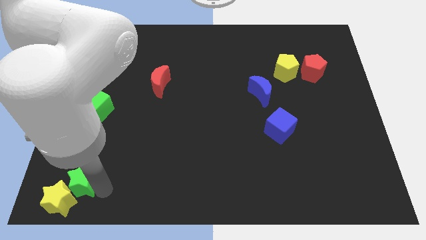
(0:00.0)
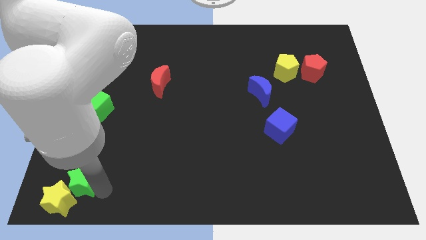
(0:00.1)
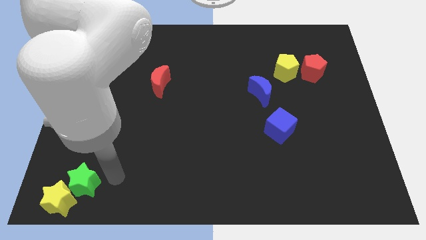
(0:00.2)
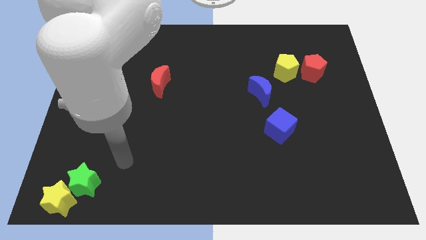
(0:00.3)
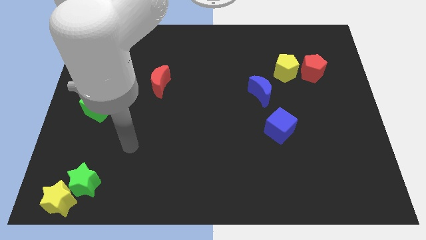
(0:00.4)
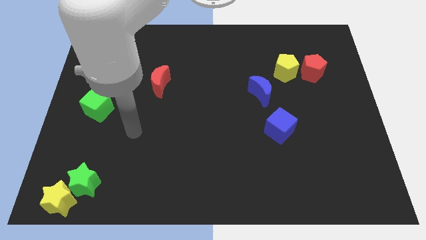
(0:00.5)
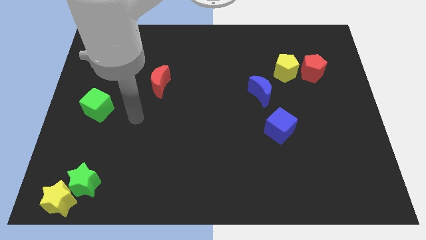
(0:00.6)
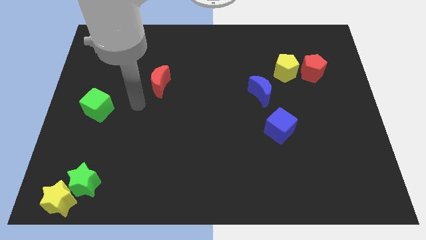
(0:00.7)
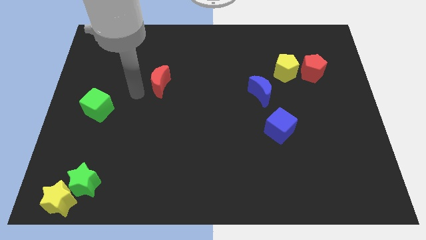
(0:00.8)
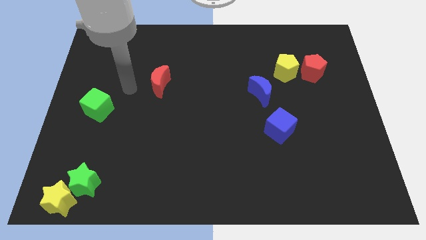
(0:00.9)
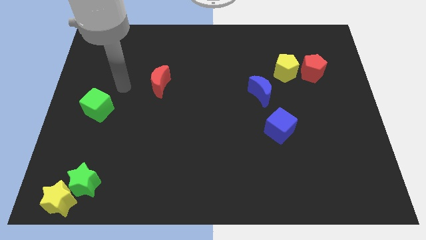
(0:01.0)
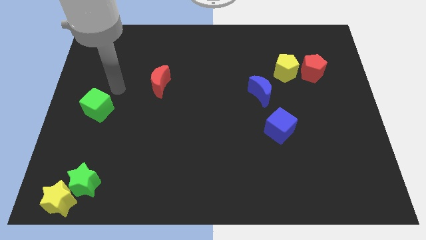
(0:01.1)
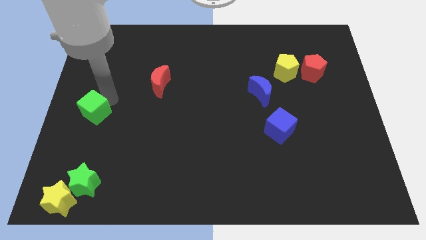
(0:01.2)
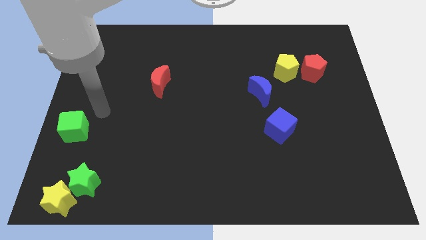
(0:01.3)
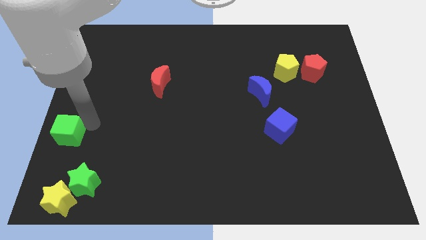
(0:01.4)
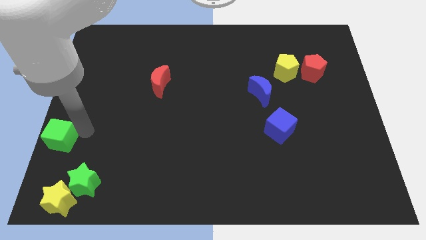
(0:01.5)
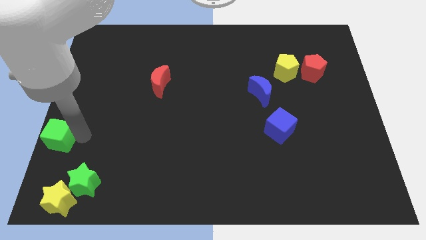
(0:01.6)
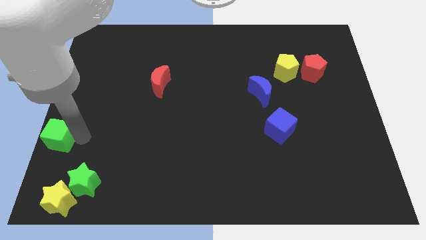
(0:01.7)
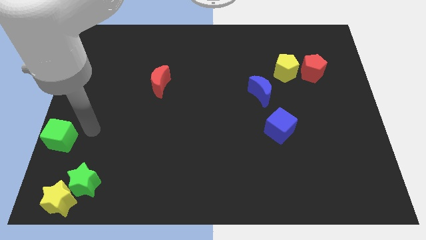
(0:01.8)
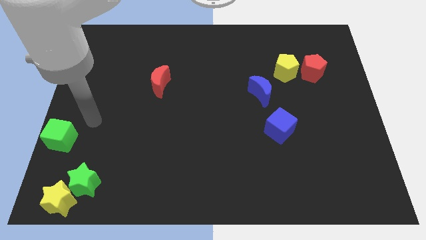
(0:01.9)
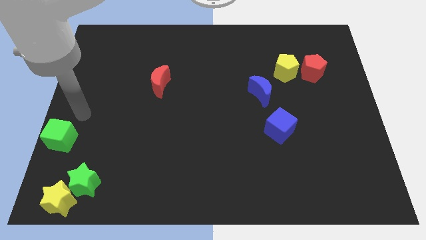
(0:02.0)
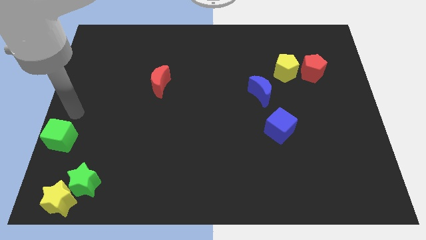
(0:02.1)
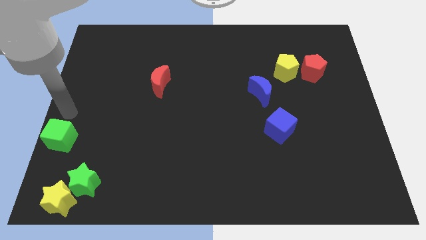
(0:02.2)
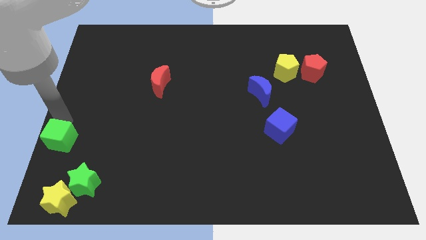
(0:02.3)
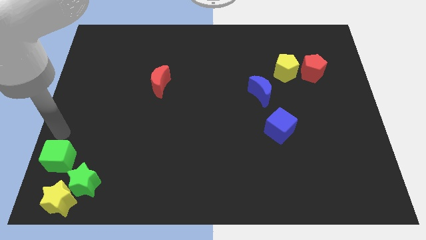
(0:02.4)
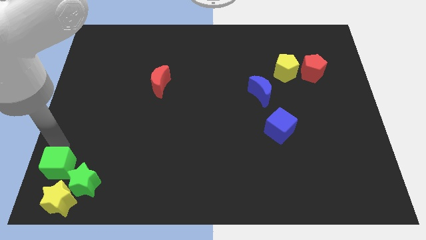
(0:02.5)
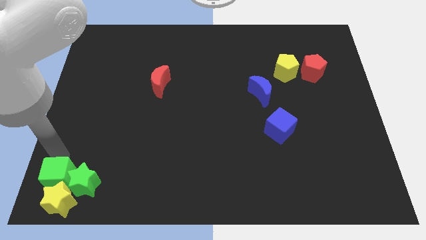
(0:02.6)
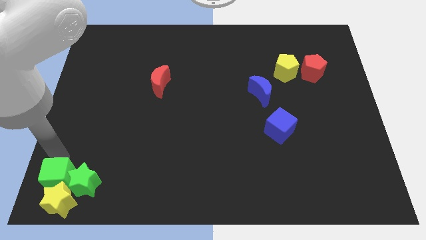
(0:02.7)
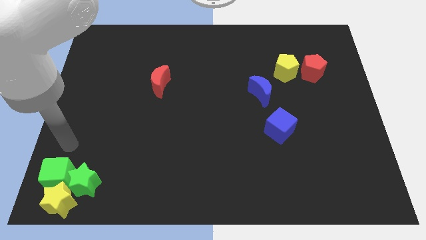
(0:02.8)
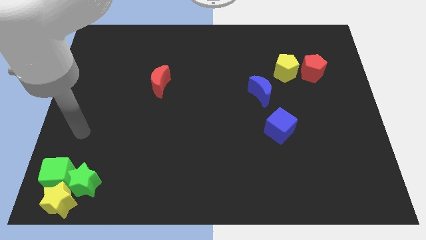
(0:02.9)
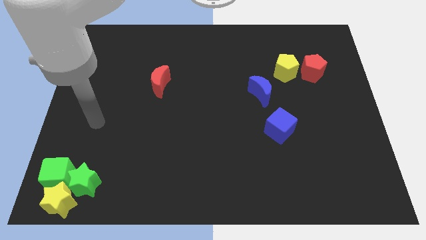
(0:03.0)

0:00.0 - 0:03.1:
push the green cube into the yellow star

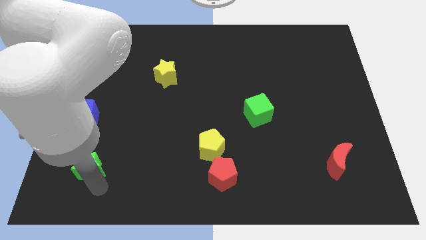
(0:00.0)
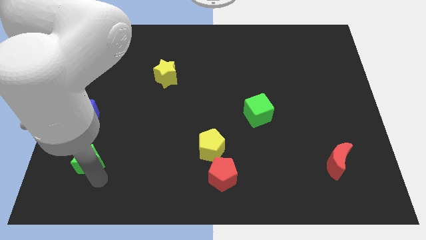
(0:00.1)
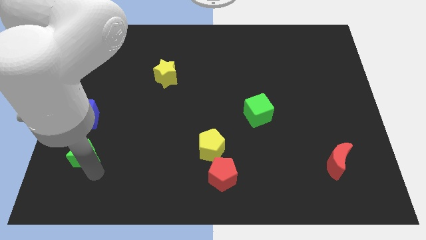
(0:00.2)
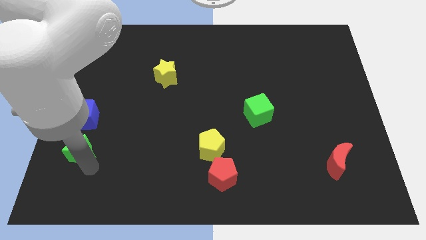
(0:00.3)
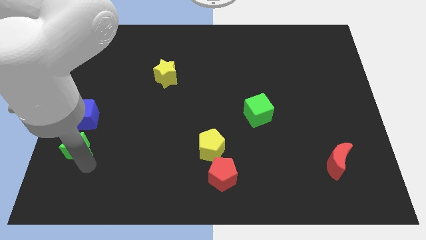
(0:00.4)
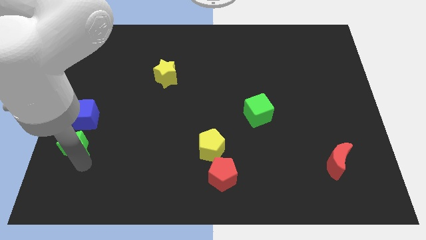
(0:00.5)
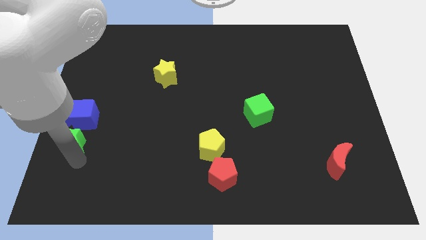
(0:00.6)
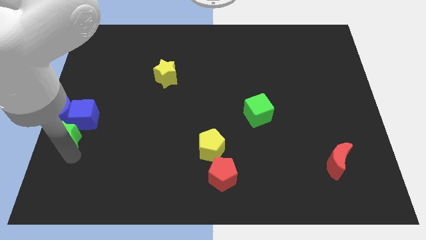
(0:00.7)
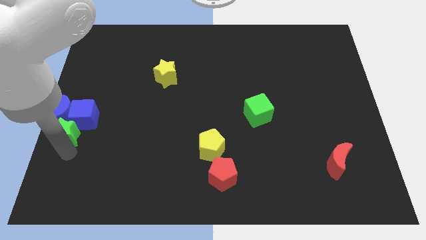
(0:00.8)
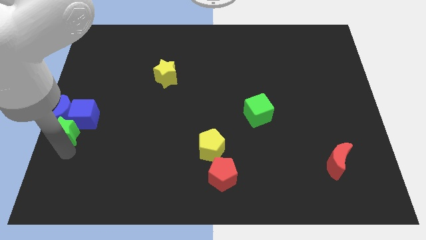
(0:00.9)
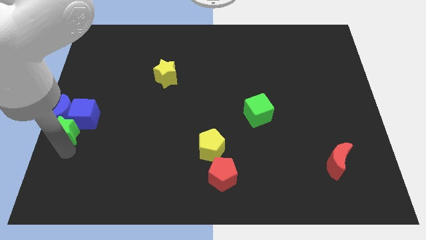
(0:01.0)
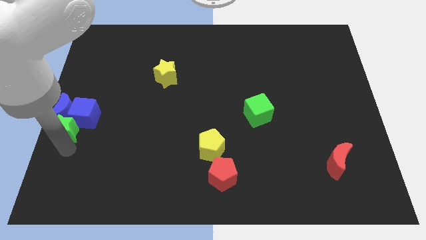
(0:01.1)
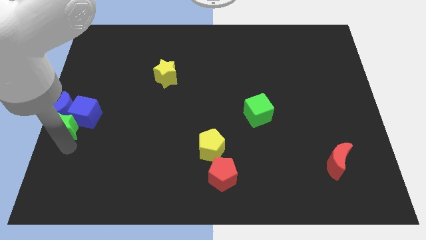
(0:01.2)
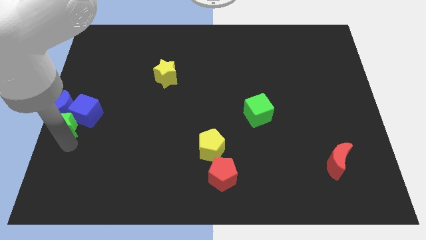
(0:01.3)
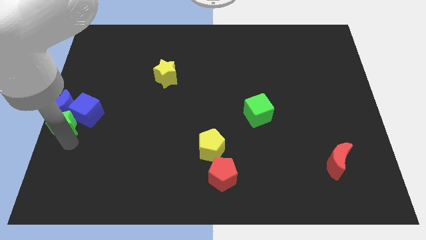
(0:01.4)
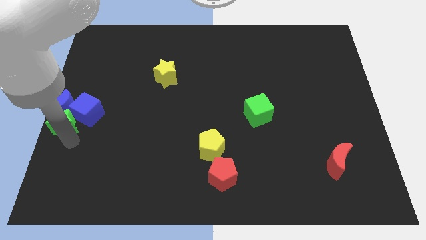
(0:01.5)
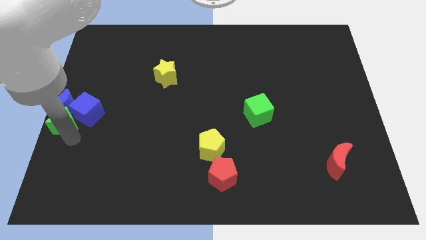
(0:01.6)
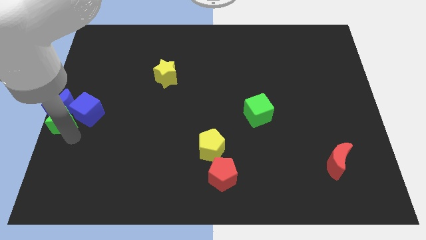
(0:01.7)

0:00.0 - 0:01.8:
push the green star to the bottom of the blue crescent

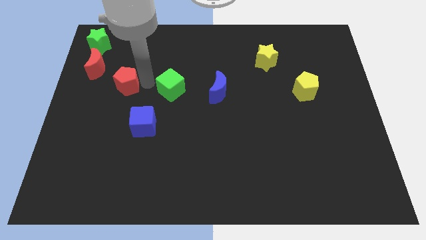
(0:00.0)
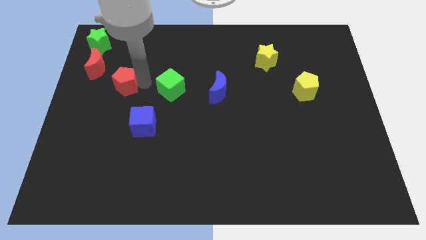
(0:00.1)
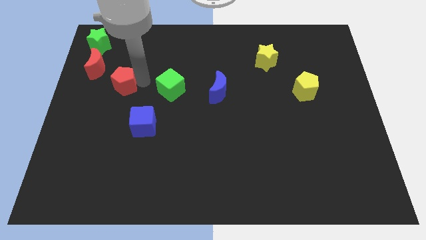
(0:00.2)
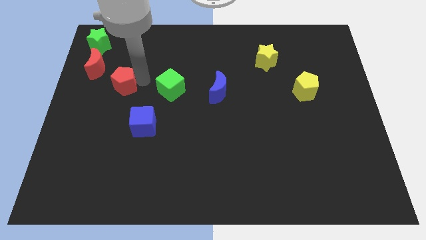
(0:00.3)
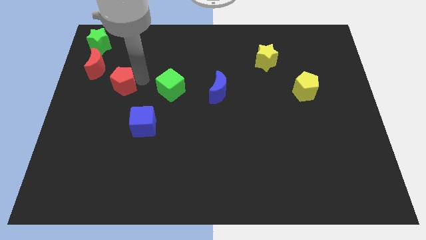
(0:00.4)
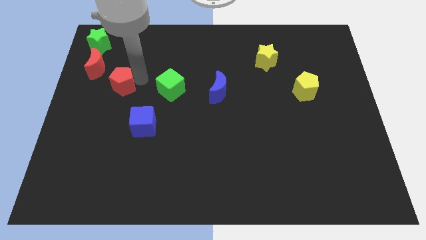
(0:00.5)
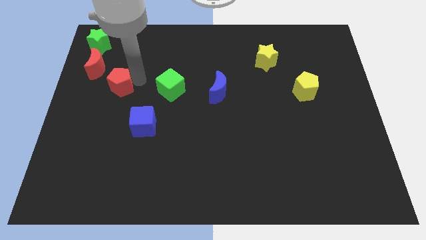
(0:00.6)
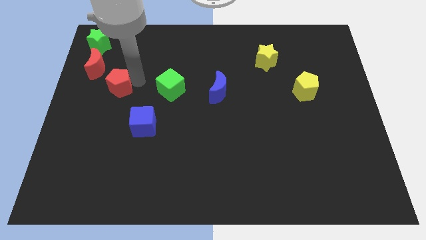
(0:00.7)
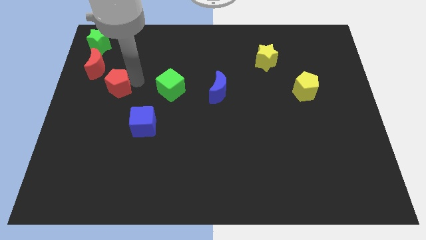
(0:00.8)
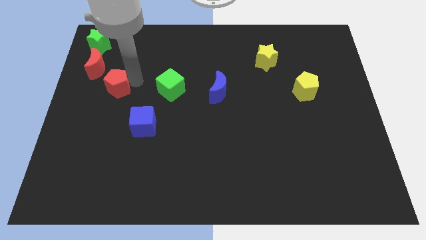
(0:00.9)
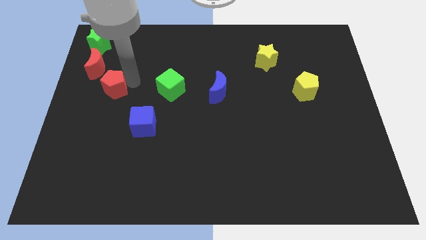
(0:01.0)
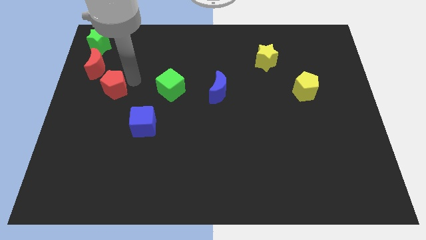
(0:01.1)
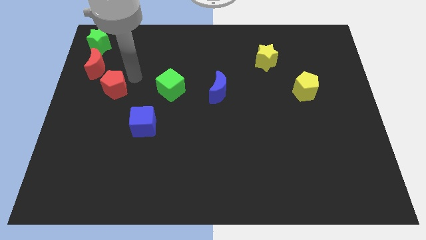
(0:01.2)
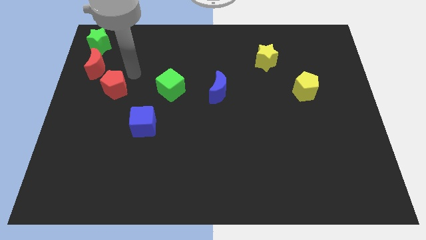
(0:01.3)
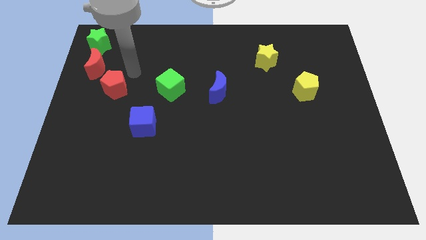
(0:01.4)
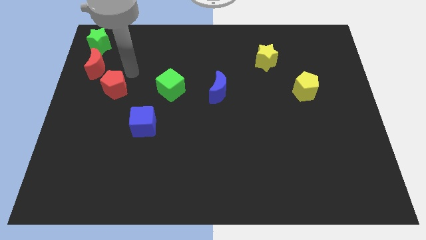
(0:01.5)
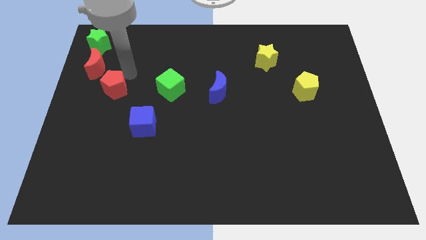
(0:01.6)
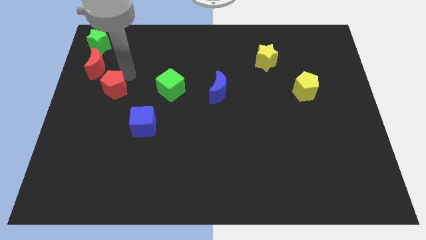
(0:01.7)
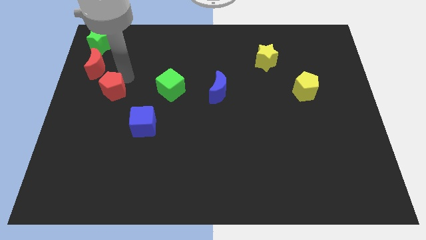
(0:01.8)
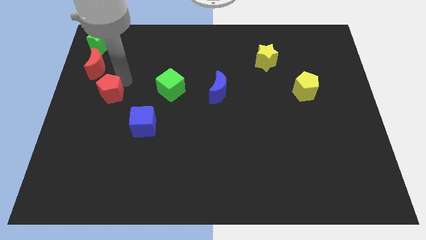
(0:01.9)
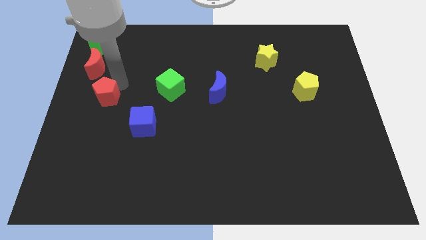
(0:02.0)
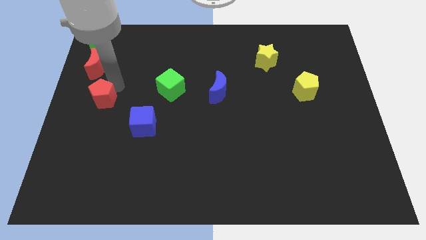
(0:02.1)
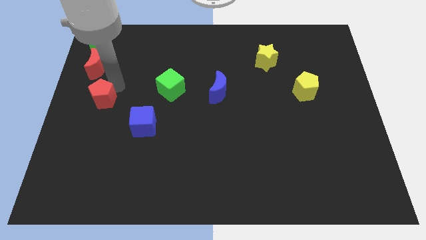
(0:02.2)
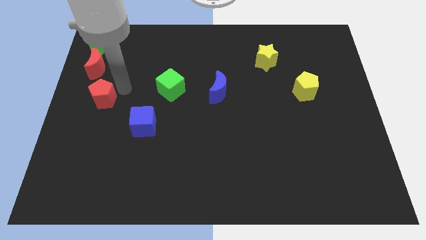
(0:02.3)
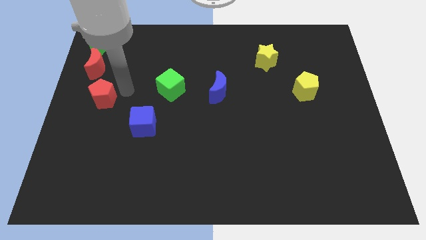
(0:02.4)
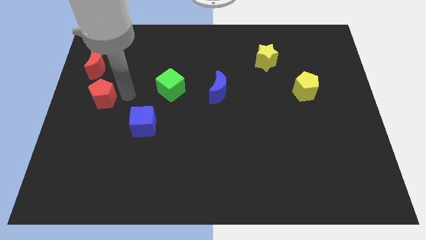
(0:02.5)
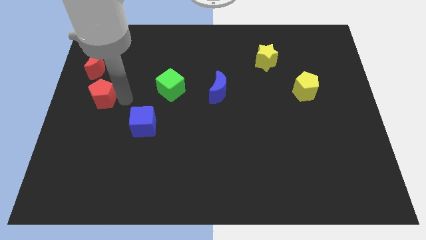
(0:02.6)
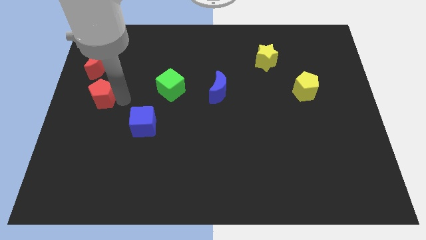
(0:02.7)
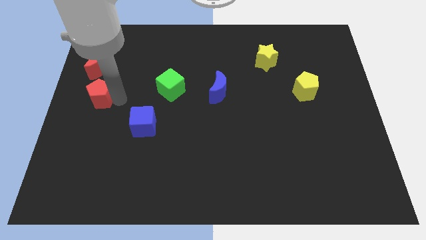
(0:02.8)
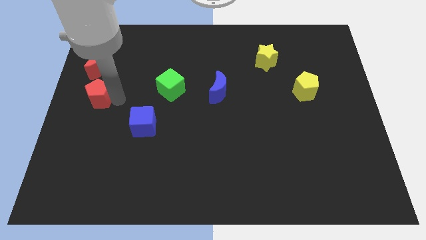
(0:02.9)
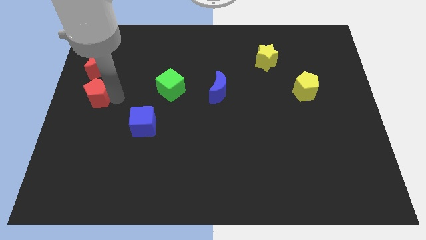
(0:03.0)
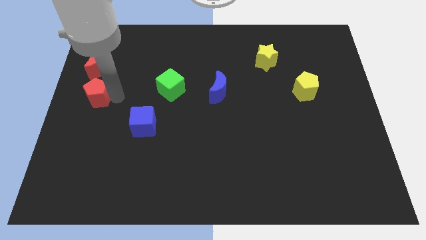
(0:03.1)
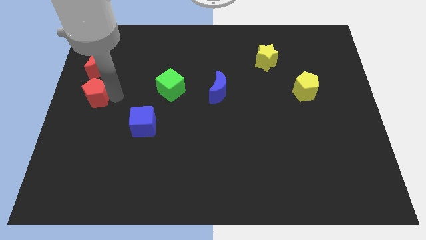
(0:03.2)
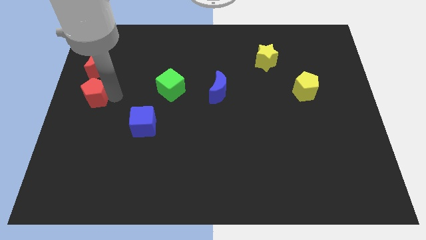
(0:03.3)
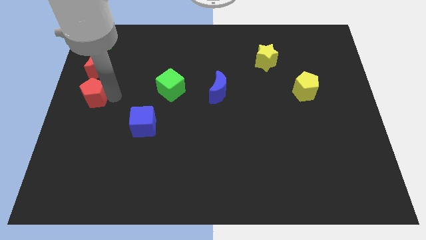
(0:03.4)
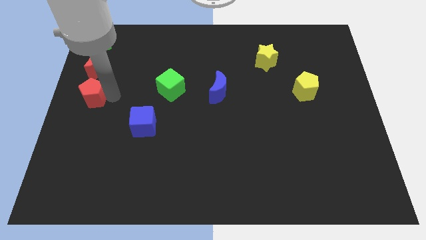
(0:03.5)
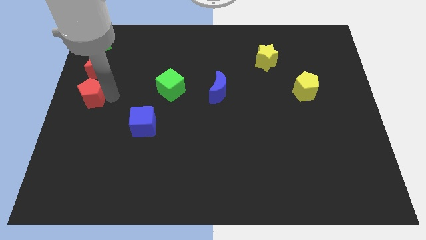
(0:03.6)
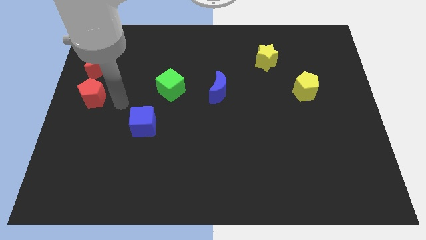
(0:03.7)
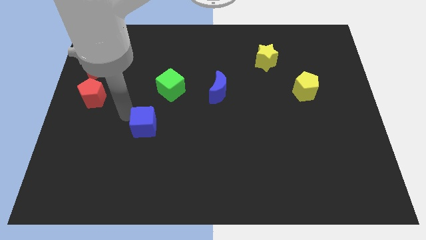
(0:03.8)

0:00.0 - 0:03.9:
place red pentagon below red crescent
